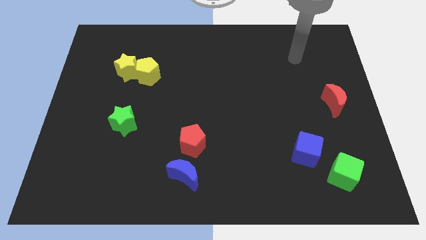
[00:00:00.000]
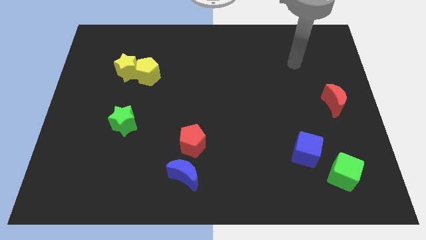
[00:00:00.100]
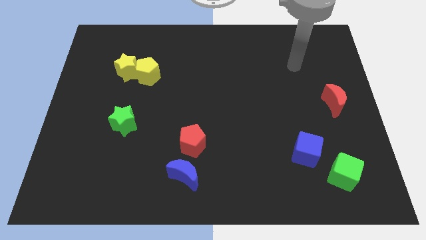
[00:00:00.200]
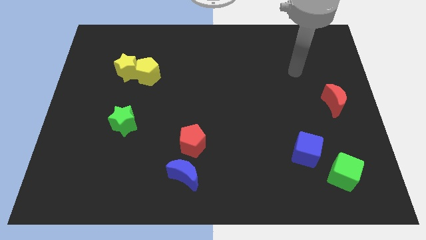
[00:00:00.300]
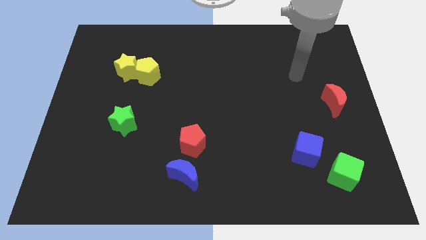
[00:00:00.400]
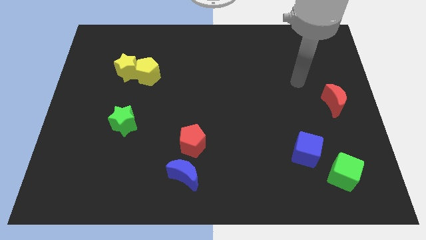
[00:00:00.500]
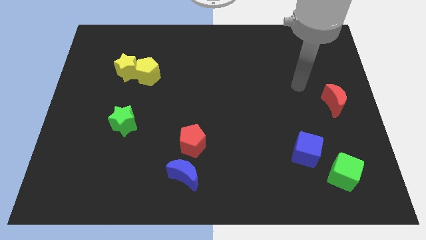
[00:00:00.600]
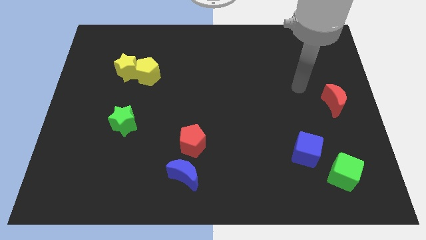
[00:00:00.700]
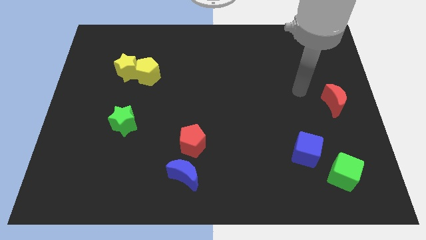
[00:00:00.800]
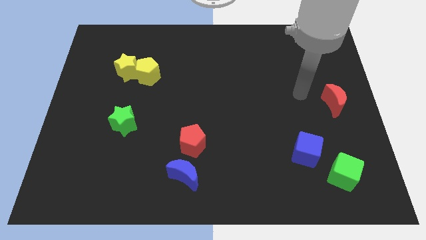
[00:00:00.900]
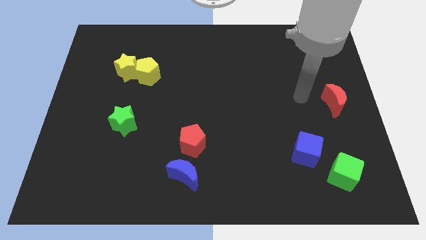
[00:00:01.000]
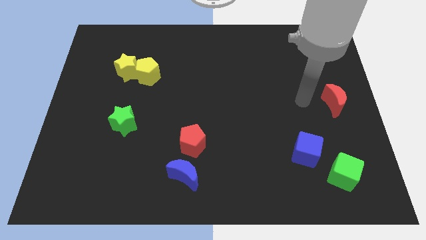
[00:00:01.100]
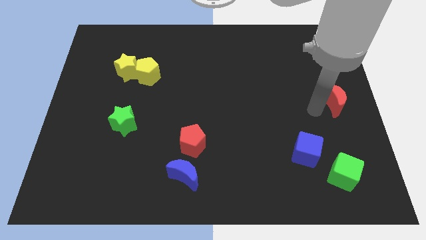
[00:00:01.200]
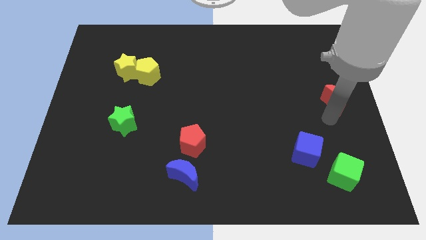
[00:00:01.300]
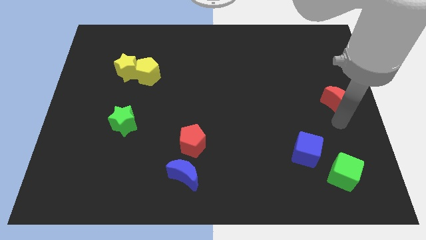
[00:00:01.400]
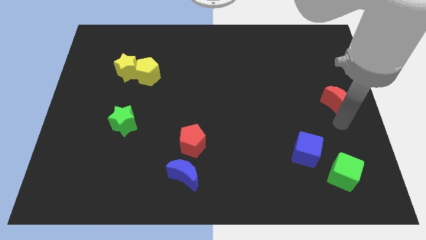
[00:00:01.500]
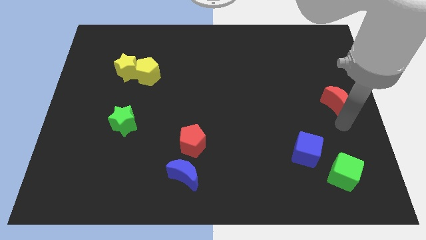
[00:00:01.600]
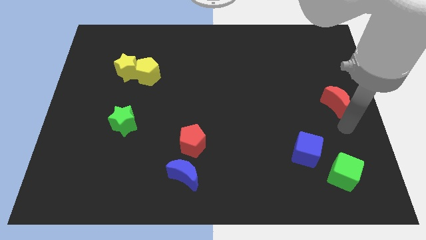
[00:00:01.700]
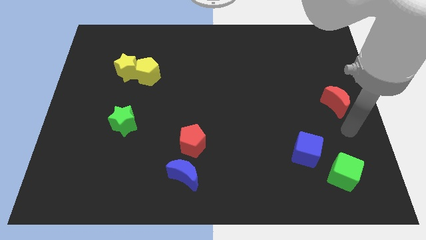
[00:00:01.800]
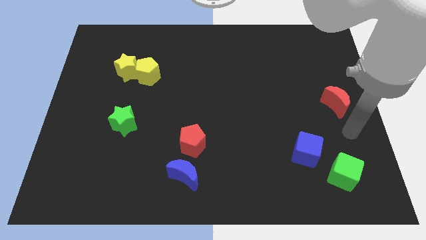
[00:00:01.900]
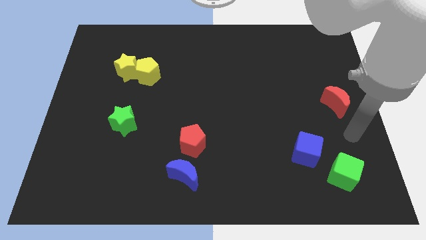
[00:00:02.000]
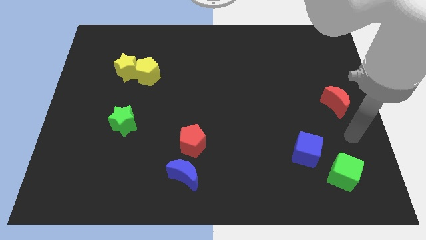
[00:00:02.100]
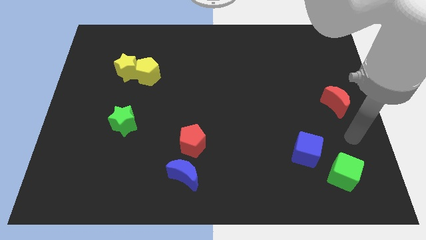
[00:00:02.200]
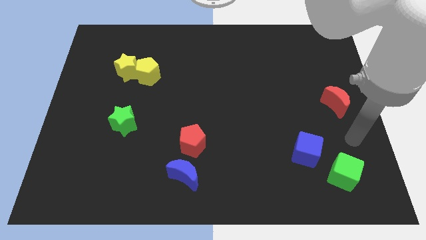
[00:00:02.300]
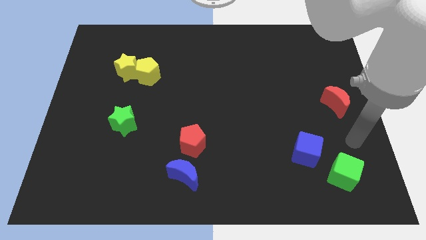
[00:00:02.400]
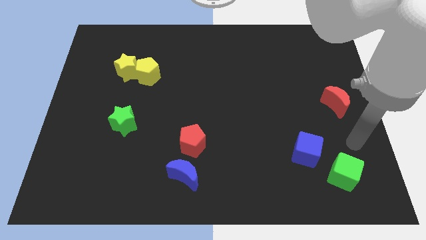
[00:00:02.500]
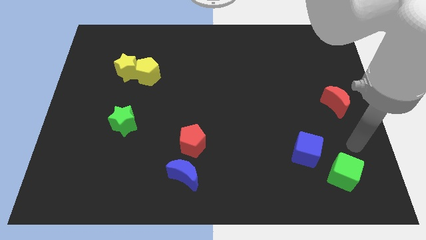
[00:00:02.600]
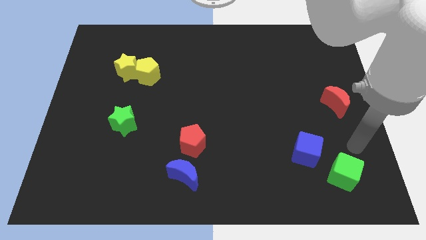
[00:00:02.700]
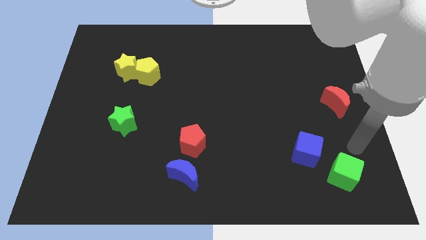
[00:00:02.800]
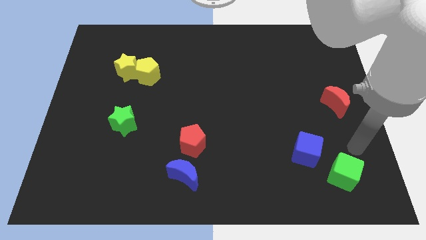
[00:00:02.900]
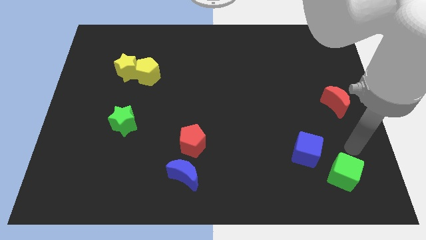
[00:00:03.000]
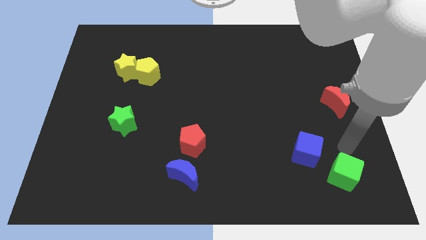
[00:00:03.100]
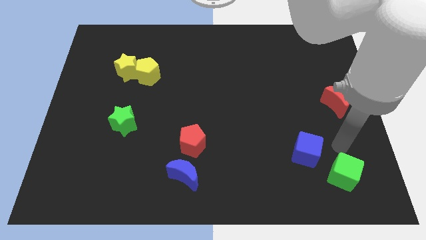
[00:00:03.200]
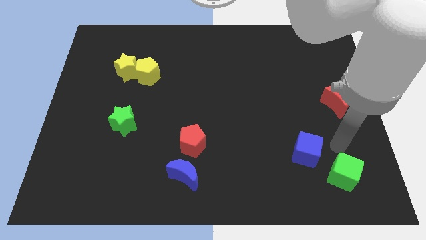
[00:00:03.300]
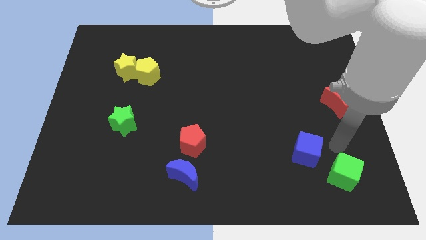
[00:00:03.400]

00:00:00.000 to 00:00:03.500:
place your hand to the right of the blue cube

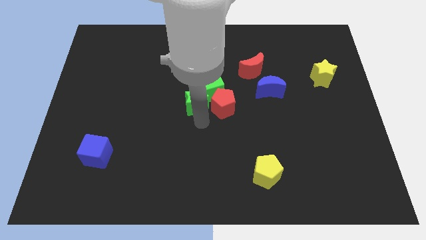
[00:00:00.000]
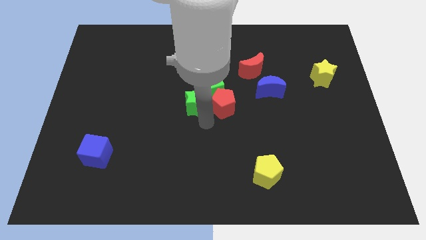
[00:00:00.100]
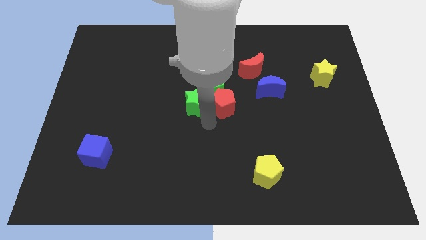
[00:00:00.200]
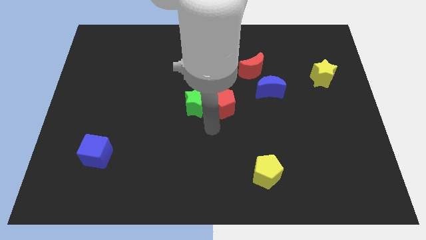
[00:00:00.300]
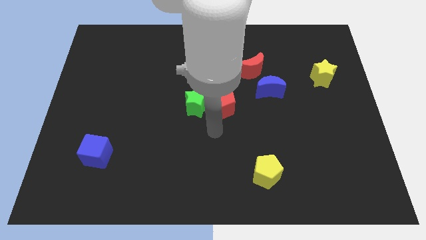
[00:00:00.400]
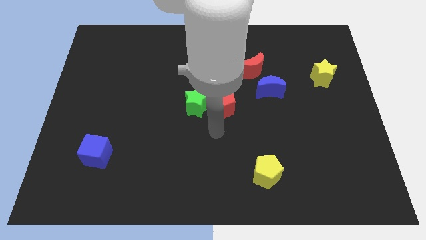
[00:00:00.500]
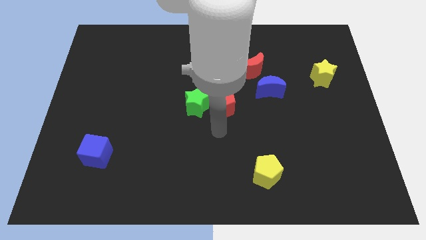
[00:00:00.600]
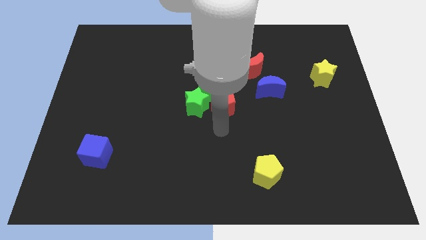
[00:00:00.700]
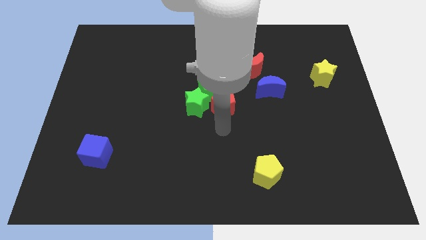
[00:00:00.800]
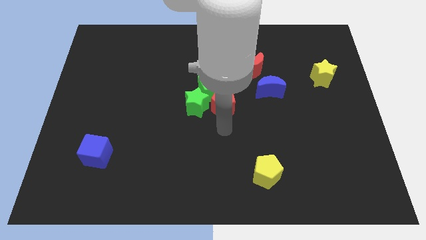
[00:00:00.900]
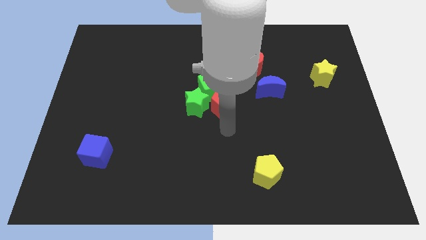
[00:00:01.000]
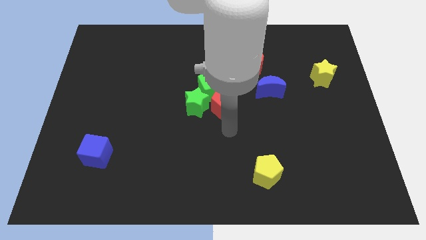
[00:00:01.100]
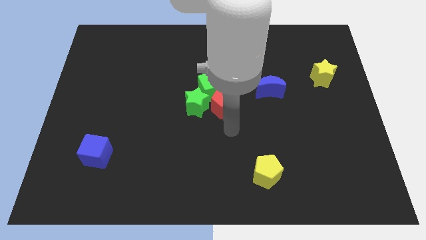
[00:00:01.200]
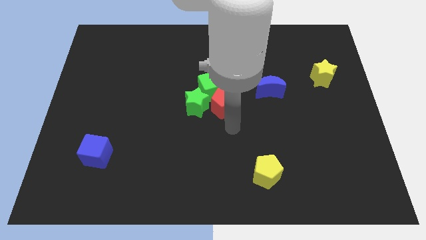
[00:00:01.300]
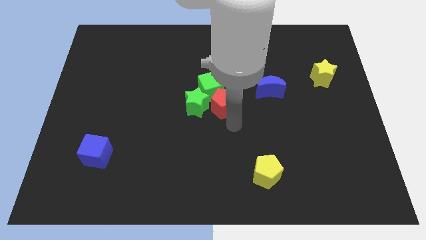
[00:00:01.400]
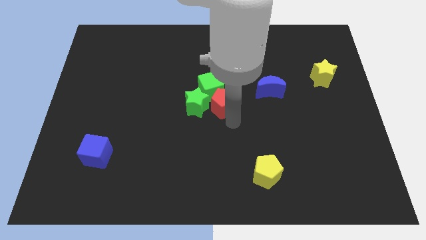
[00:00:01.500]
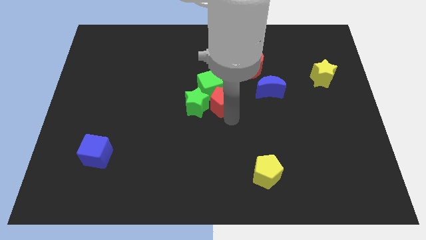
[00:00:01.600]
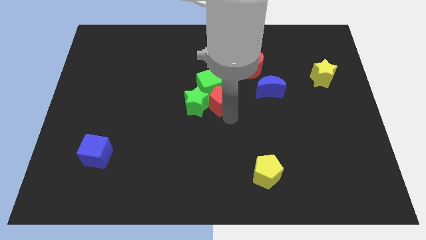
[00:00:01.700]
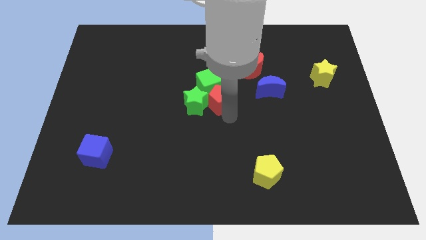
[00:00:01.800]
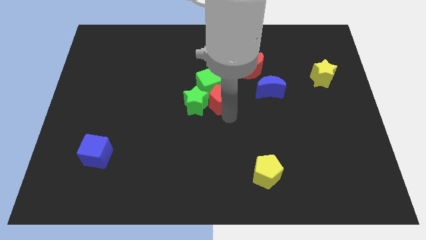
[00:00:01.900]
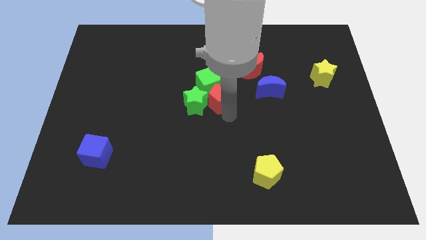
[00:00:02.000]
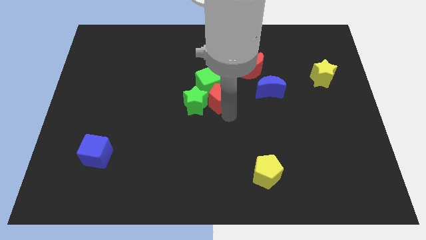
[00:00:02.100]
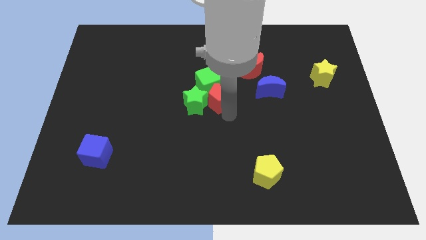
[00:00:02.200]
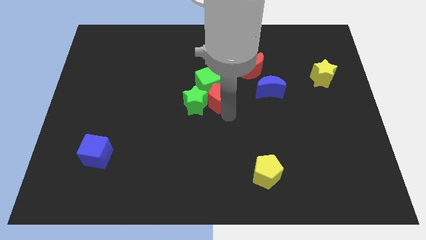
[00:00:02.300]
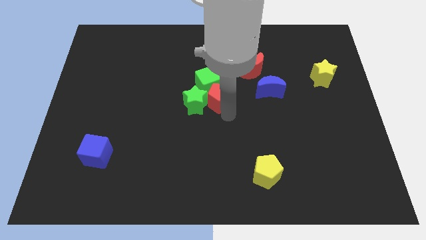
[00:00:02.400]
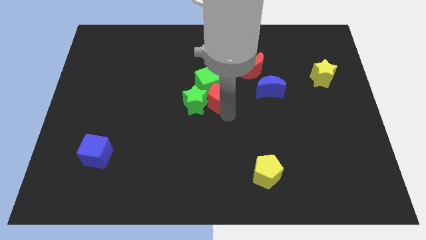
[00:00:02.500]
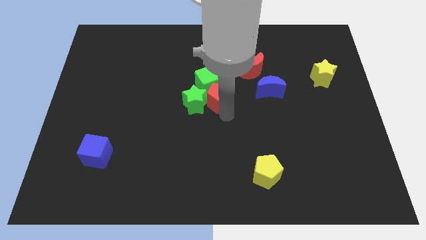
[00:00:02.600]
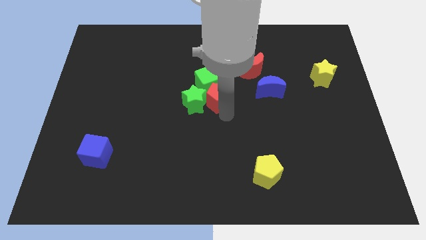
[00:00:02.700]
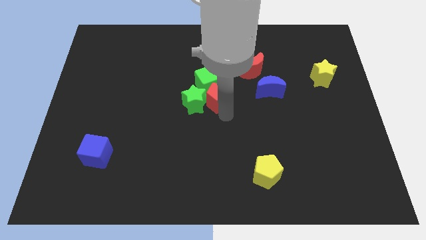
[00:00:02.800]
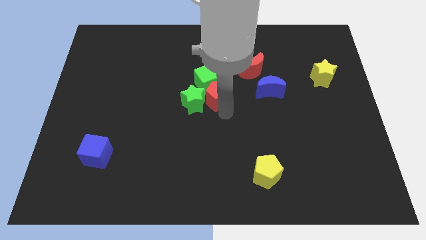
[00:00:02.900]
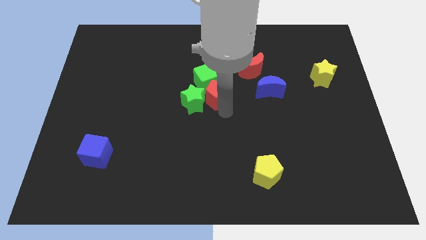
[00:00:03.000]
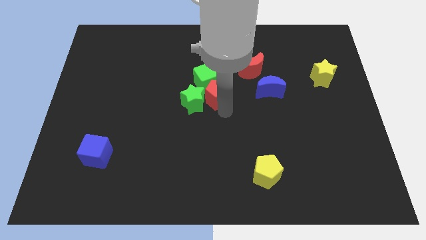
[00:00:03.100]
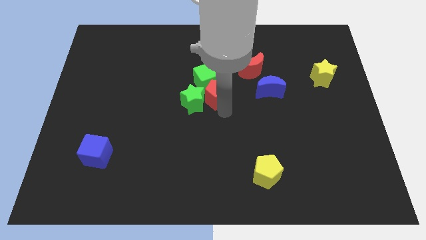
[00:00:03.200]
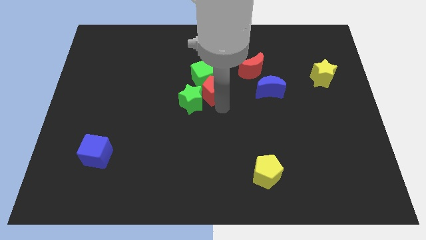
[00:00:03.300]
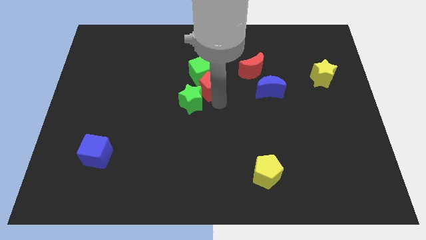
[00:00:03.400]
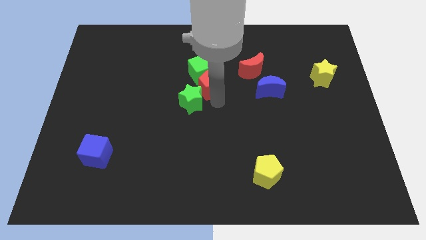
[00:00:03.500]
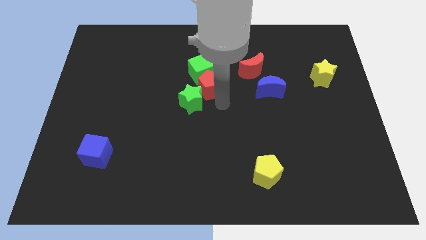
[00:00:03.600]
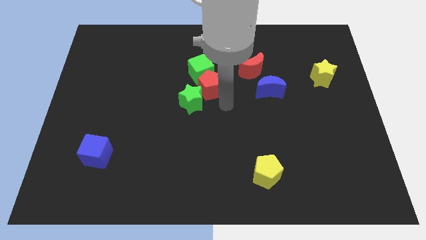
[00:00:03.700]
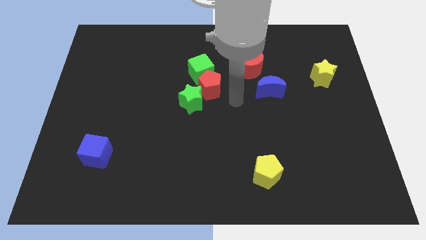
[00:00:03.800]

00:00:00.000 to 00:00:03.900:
push the green cube to the top with the red pentagon

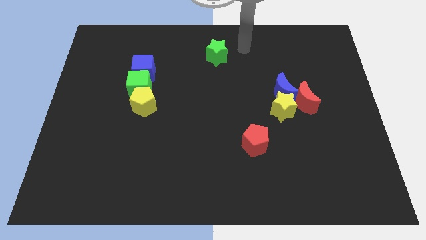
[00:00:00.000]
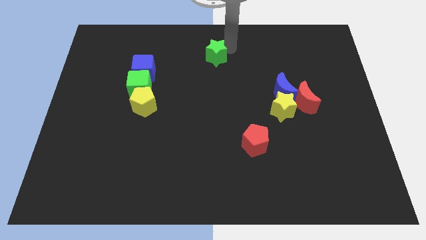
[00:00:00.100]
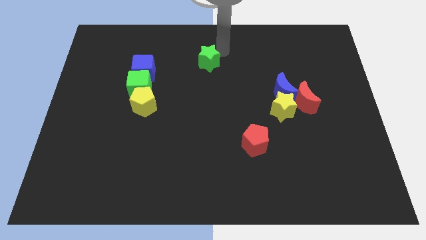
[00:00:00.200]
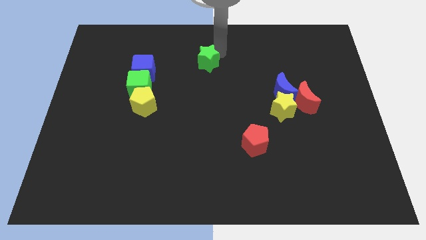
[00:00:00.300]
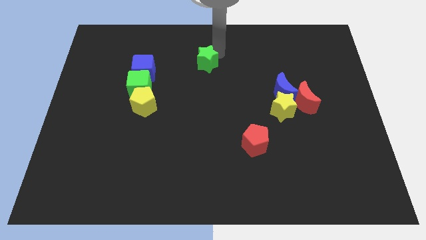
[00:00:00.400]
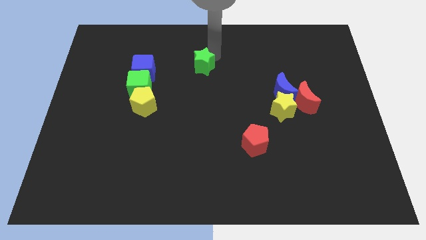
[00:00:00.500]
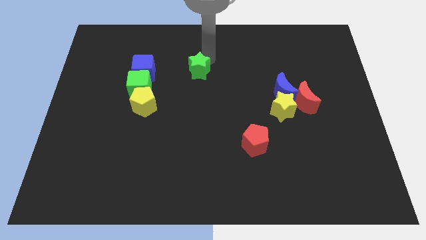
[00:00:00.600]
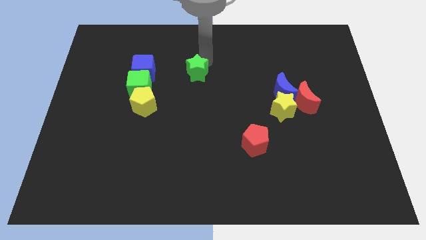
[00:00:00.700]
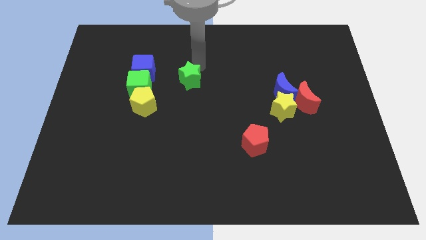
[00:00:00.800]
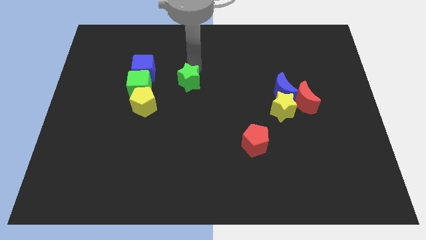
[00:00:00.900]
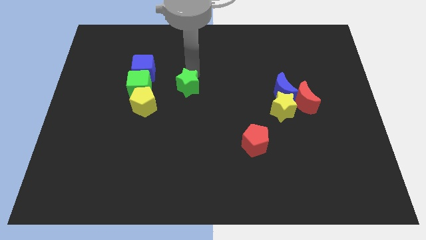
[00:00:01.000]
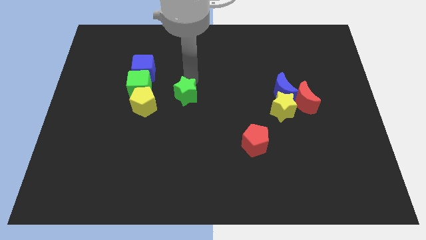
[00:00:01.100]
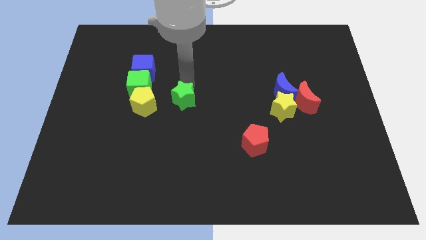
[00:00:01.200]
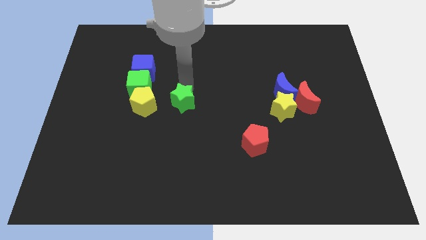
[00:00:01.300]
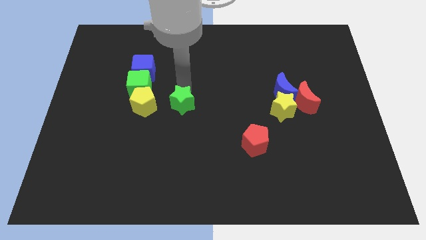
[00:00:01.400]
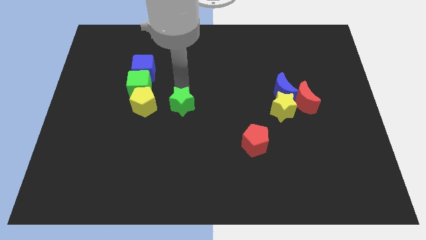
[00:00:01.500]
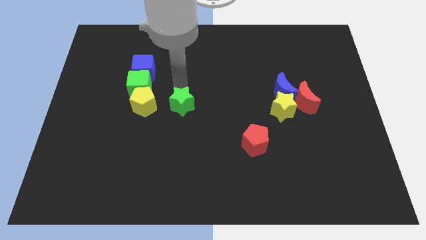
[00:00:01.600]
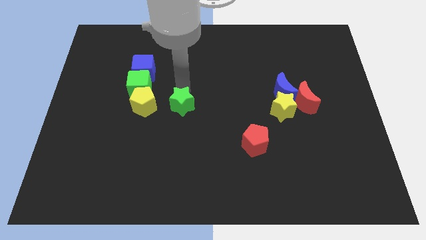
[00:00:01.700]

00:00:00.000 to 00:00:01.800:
place the green cube towards the right side of the yellow pentagon
